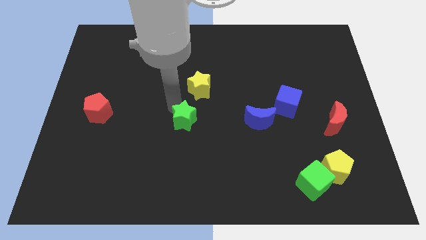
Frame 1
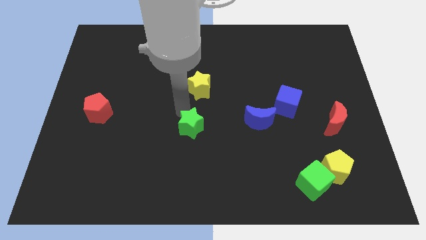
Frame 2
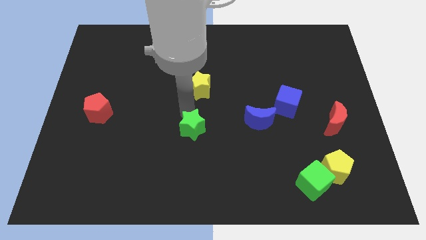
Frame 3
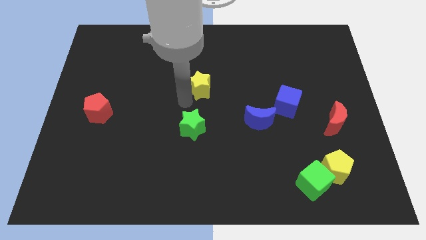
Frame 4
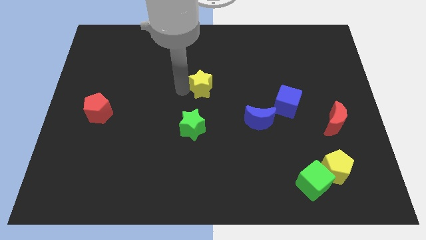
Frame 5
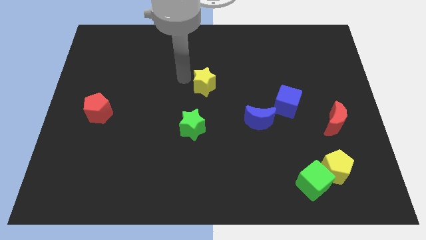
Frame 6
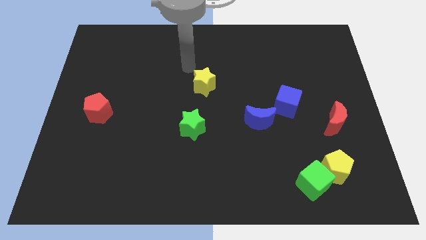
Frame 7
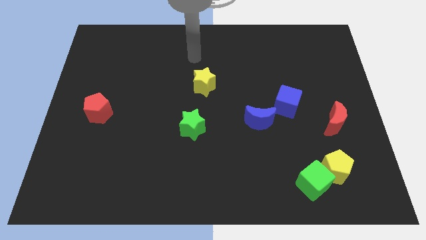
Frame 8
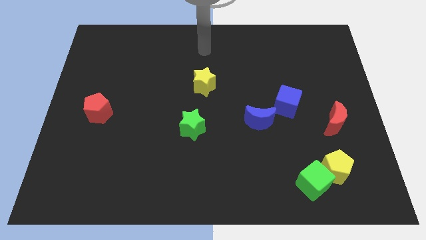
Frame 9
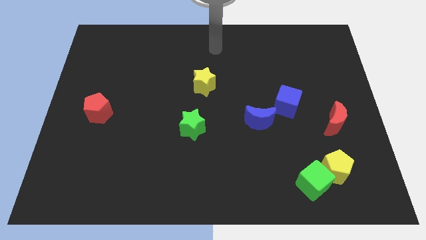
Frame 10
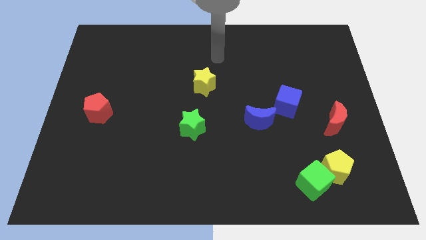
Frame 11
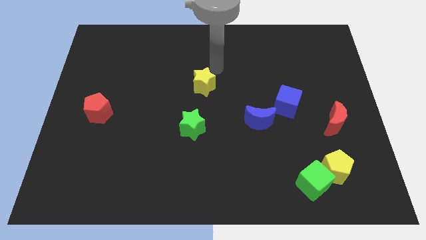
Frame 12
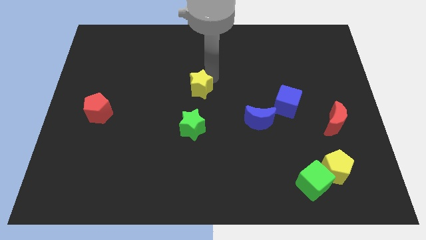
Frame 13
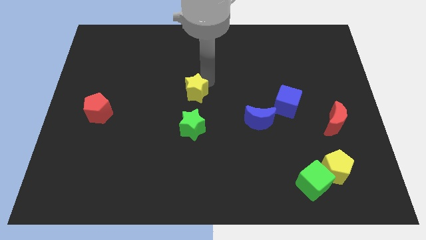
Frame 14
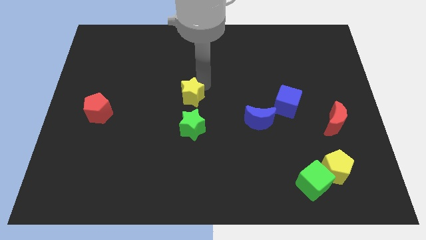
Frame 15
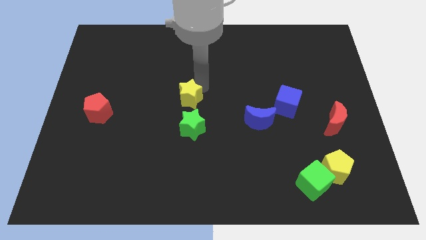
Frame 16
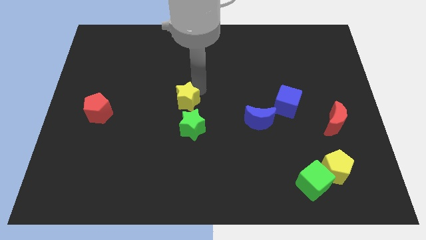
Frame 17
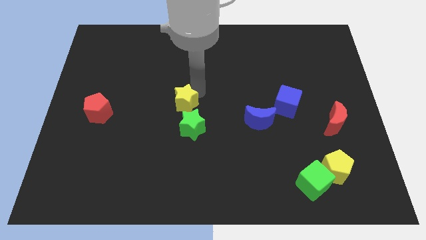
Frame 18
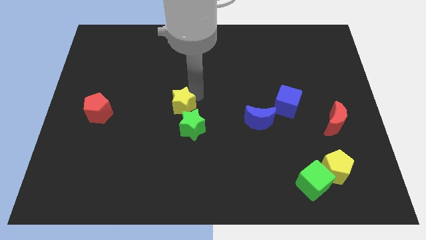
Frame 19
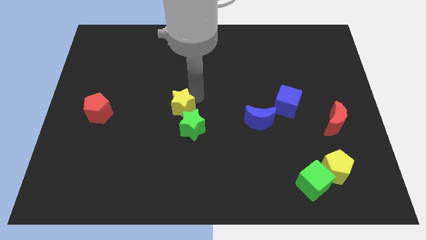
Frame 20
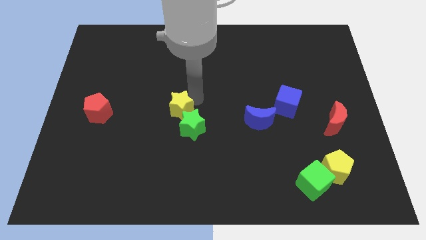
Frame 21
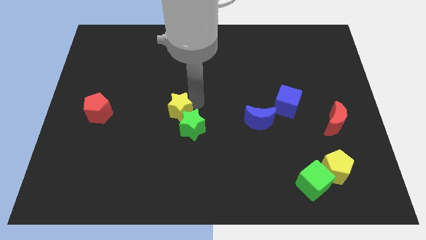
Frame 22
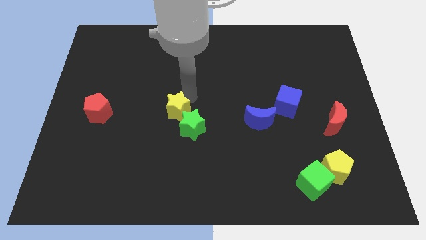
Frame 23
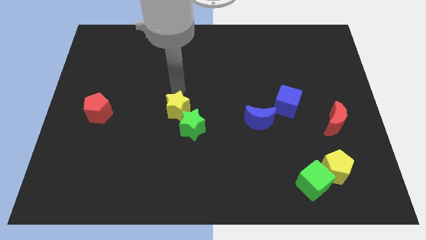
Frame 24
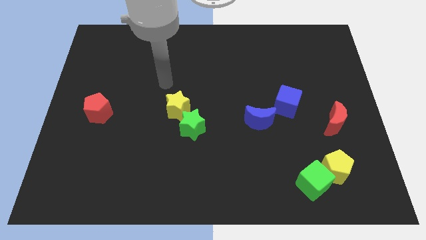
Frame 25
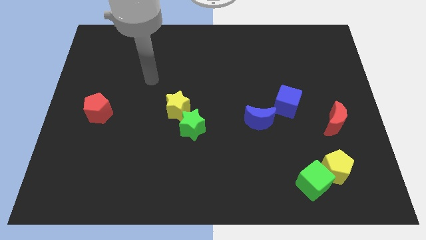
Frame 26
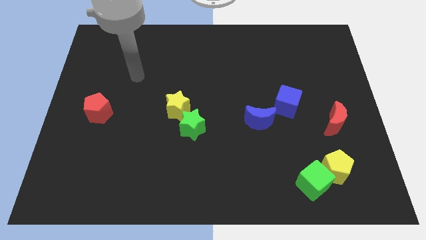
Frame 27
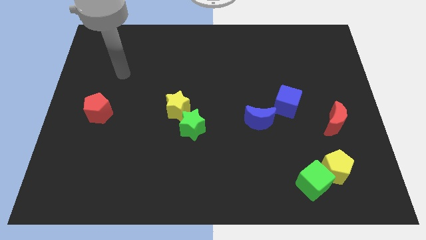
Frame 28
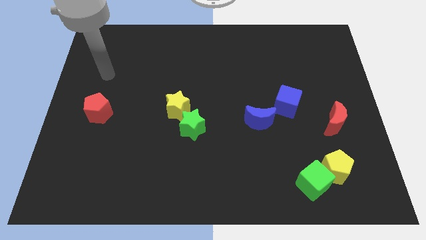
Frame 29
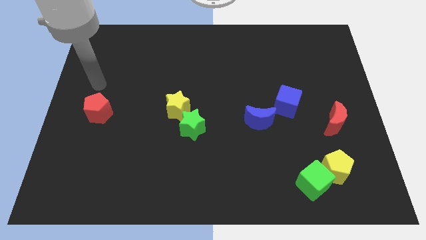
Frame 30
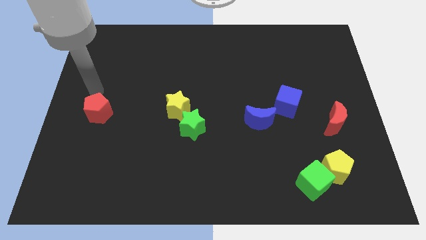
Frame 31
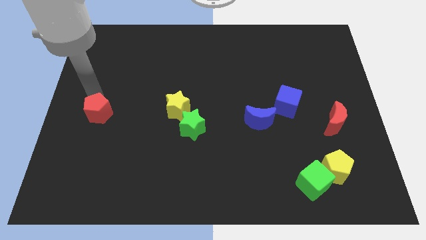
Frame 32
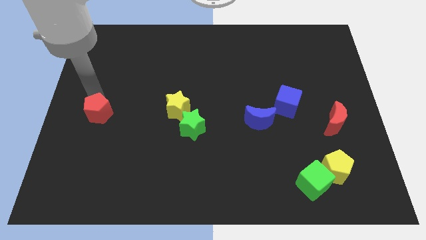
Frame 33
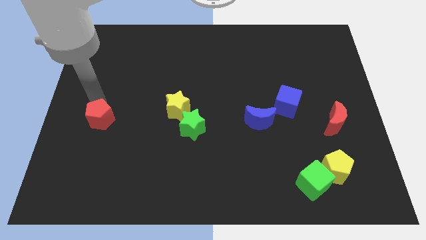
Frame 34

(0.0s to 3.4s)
push the yellow star into the green star

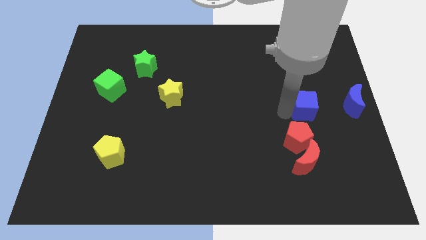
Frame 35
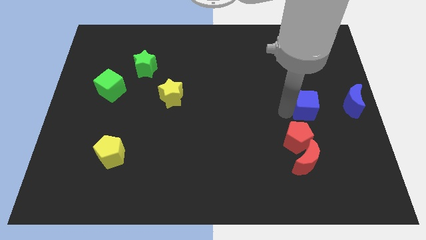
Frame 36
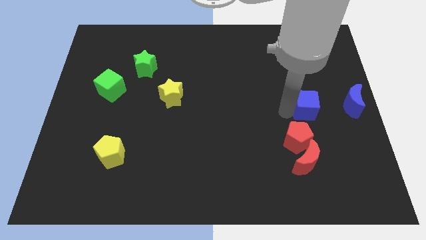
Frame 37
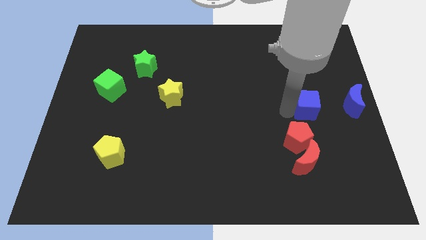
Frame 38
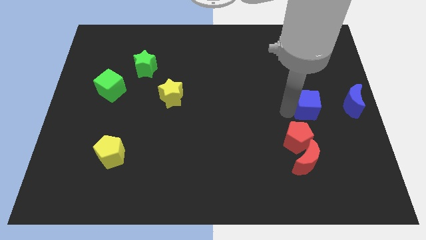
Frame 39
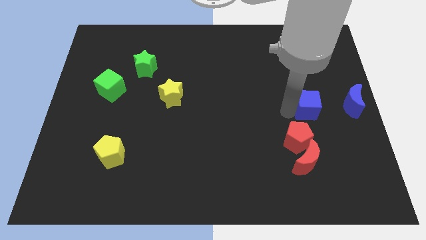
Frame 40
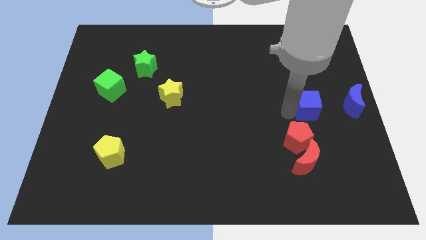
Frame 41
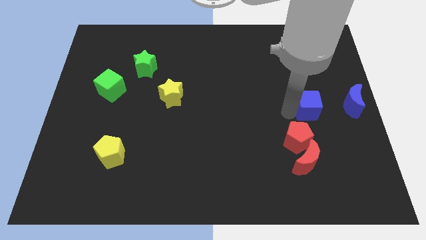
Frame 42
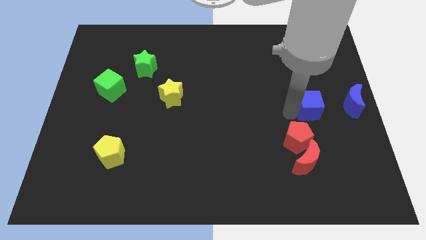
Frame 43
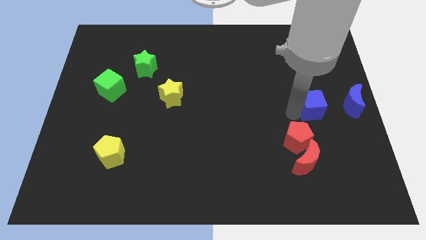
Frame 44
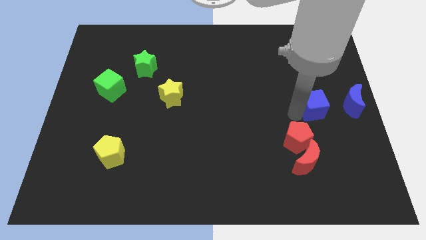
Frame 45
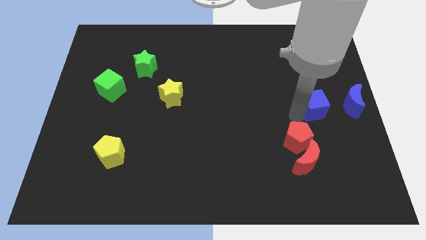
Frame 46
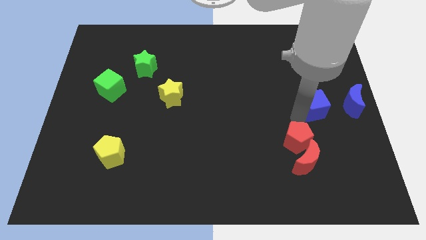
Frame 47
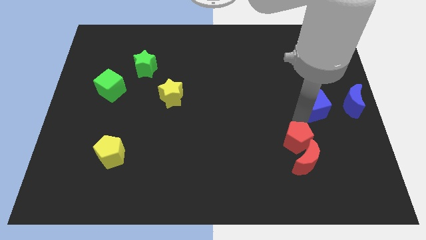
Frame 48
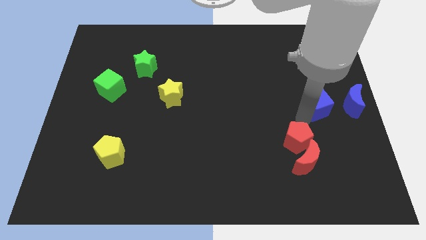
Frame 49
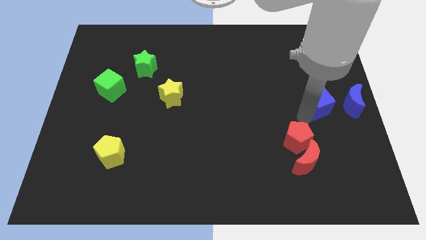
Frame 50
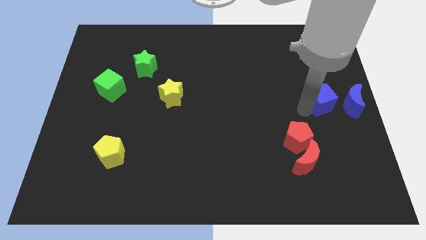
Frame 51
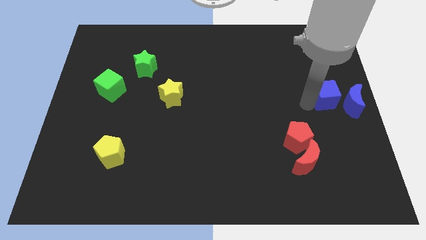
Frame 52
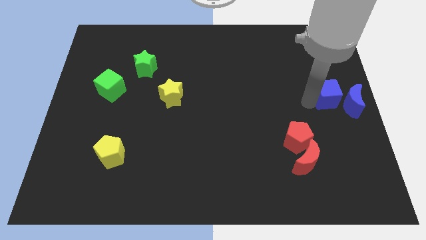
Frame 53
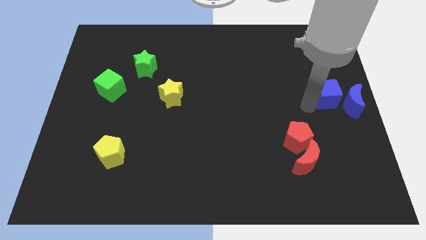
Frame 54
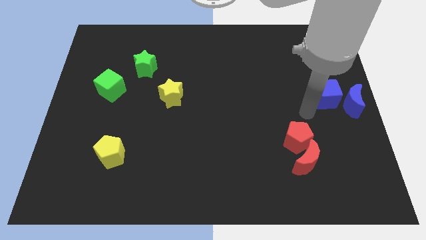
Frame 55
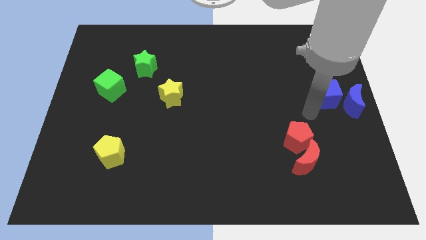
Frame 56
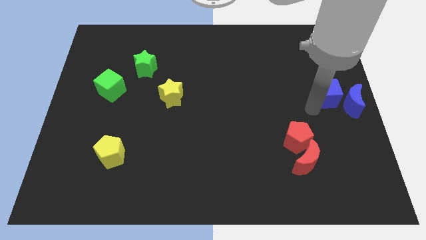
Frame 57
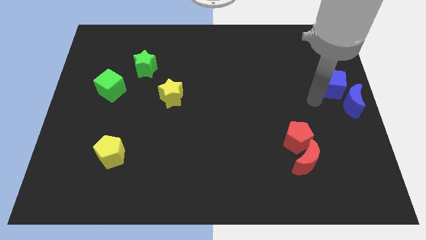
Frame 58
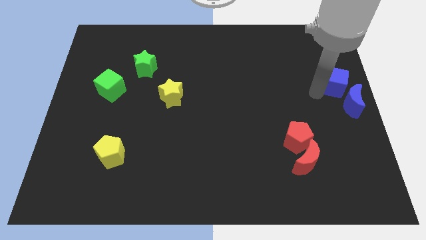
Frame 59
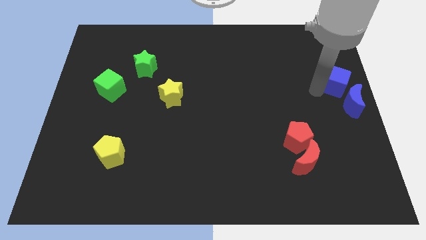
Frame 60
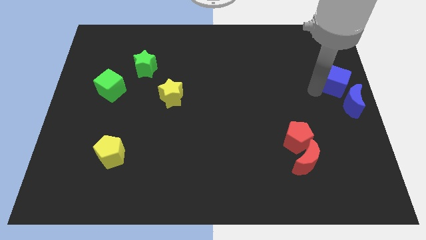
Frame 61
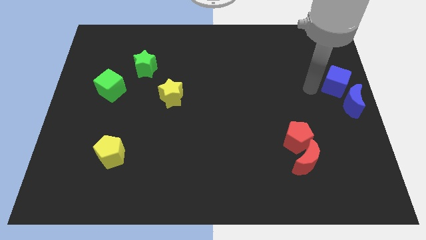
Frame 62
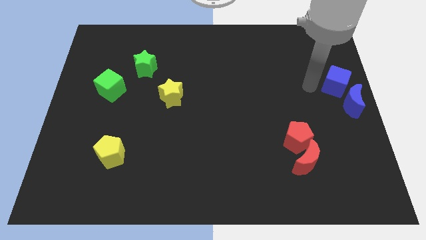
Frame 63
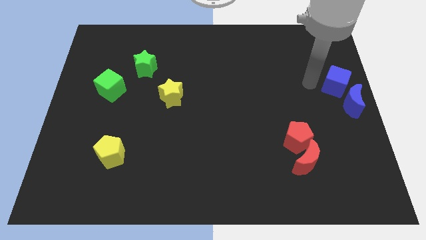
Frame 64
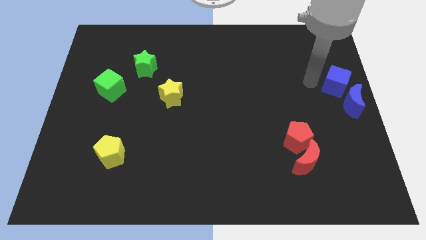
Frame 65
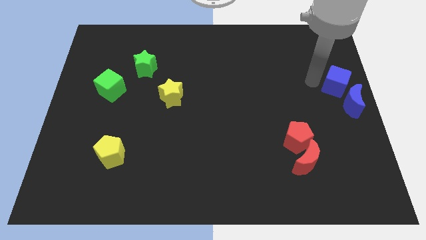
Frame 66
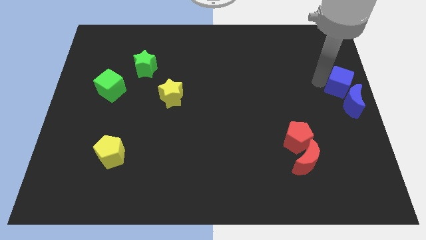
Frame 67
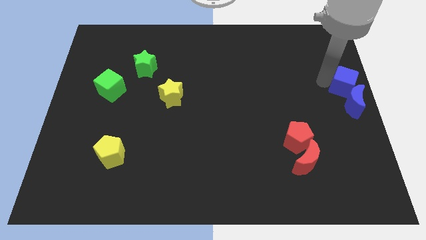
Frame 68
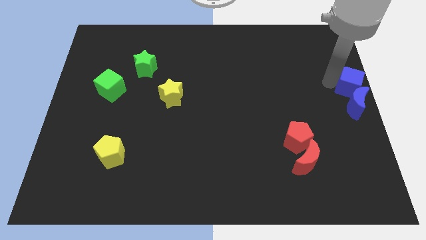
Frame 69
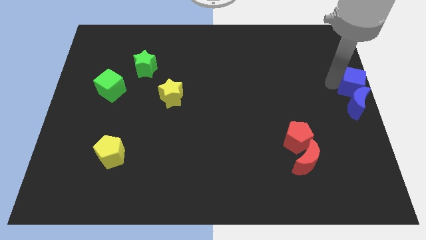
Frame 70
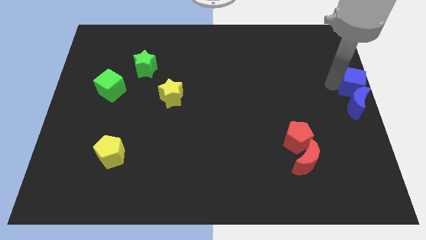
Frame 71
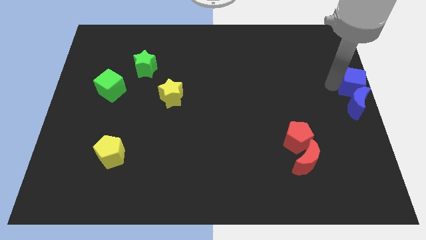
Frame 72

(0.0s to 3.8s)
move the blue cube to the top of the blue crescent

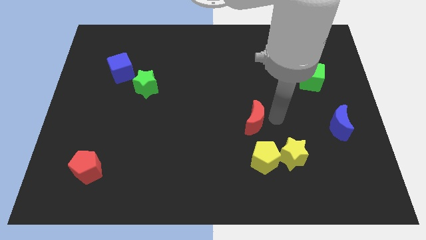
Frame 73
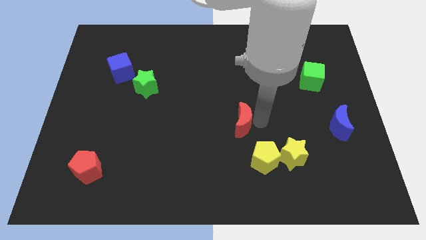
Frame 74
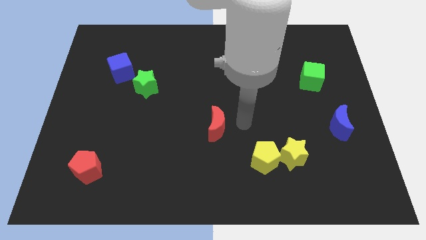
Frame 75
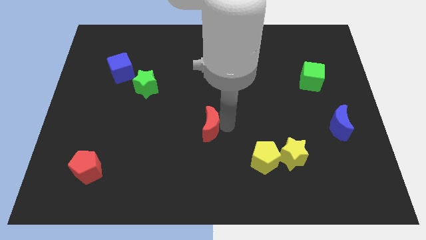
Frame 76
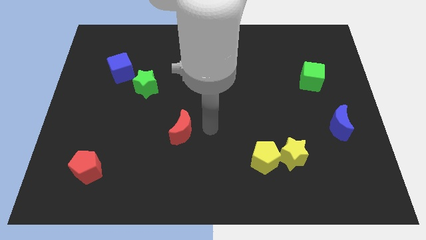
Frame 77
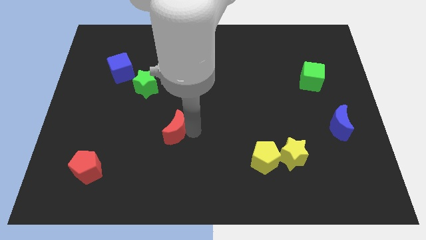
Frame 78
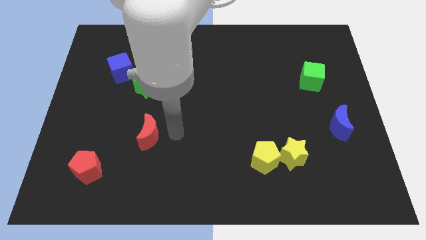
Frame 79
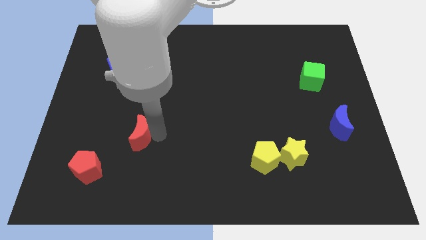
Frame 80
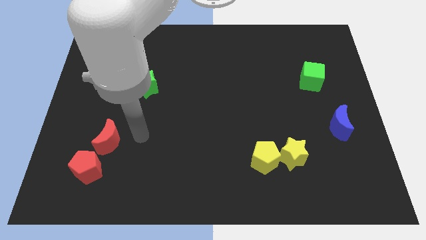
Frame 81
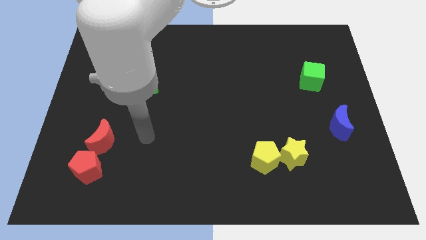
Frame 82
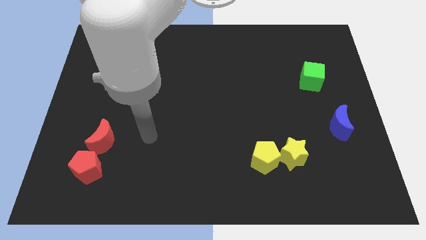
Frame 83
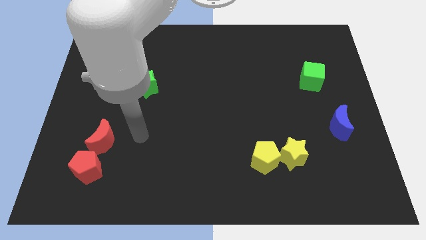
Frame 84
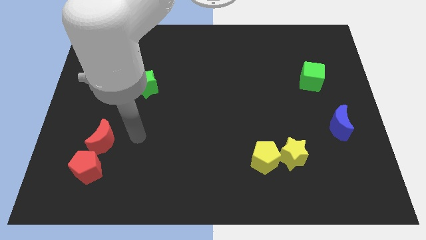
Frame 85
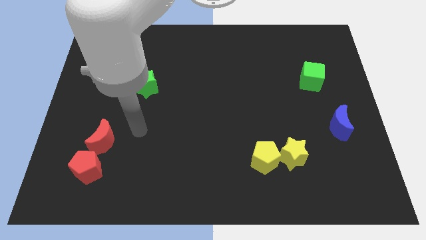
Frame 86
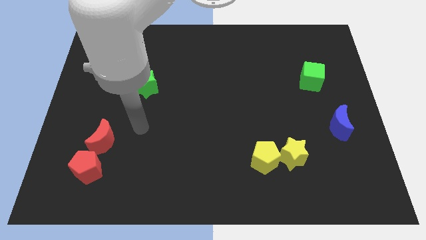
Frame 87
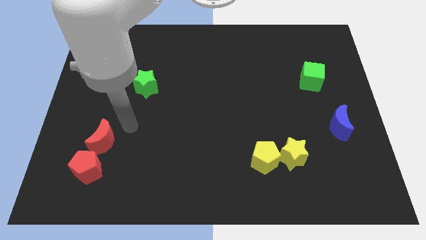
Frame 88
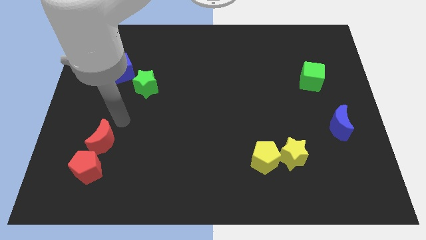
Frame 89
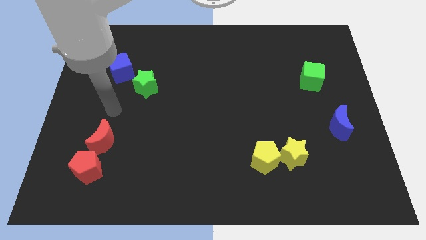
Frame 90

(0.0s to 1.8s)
move the red moon above the red pentagon
